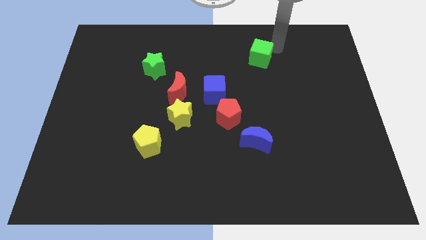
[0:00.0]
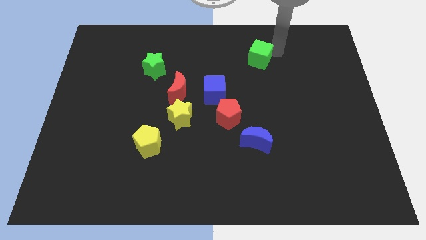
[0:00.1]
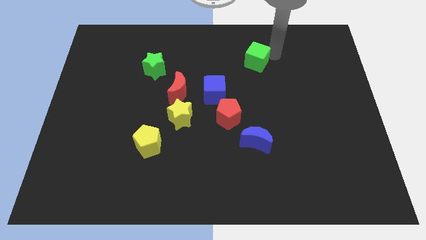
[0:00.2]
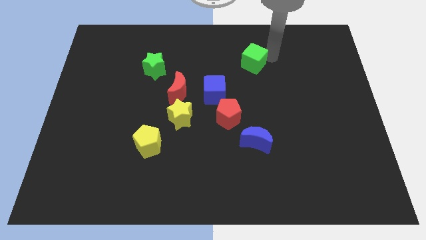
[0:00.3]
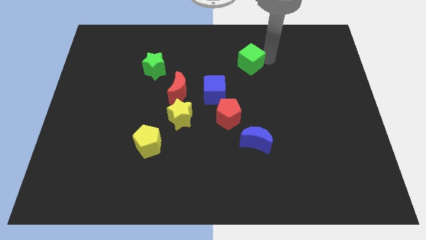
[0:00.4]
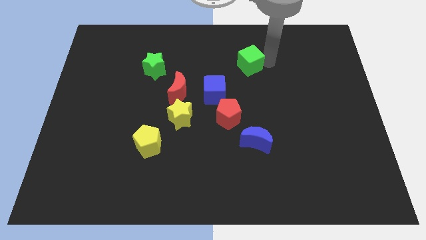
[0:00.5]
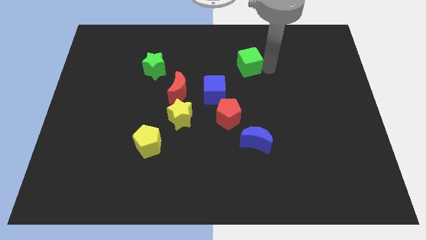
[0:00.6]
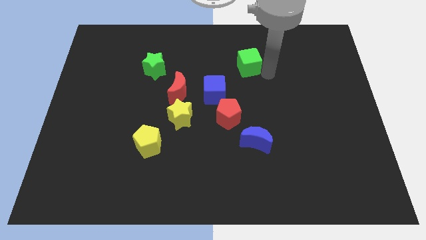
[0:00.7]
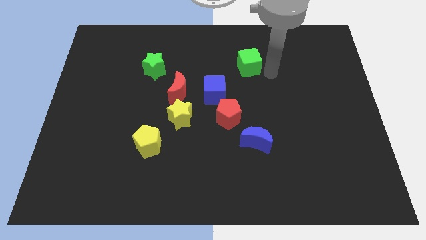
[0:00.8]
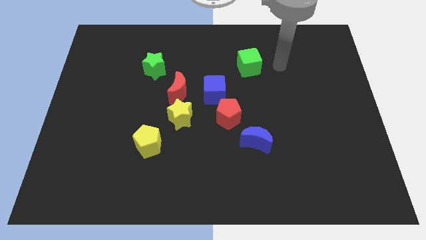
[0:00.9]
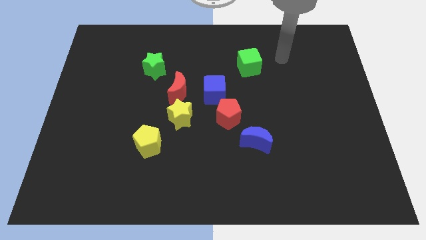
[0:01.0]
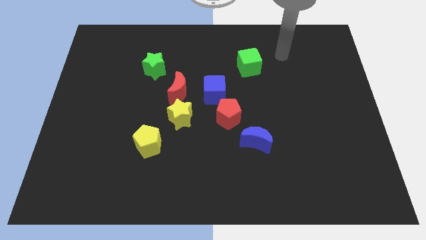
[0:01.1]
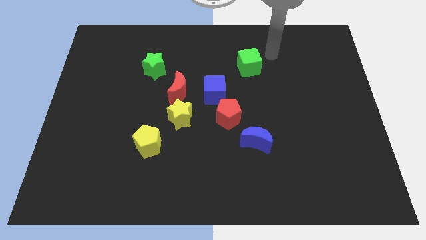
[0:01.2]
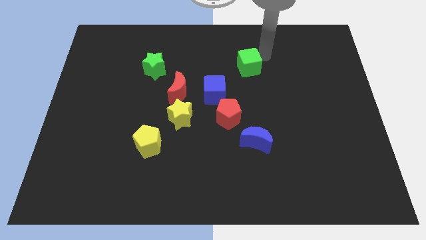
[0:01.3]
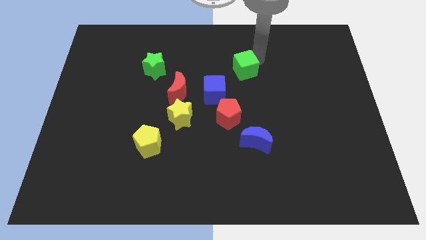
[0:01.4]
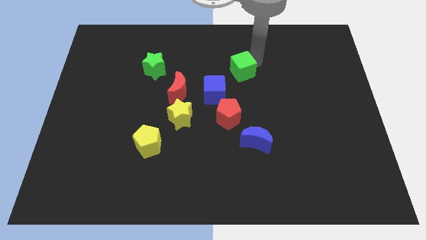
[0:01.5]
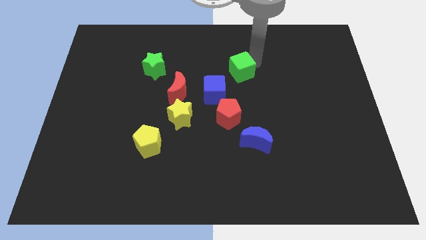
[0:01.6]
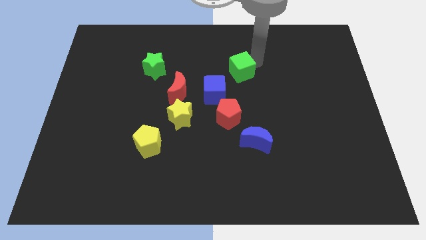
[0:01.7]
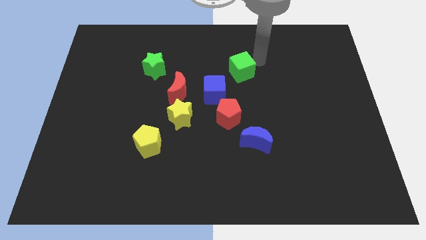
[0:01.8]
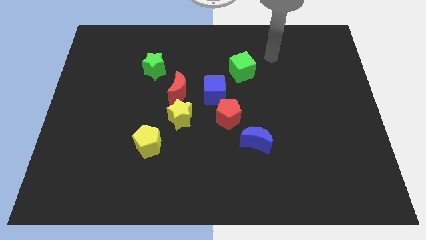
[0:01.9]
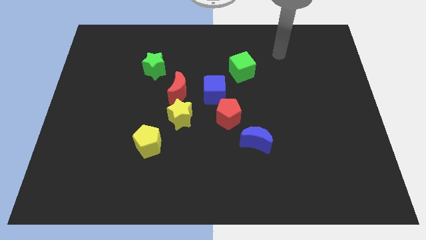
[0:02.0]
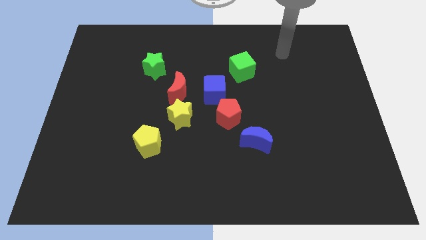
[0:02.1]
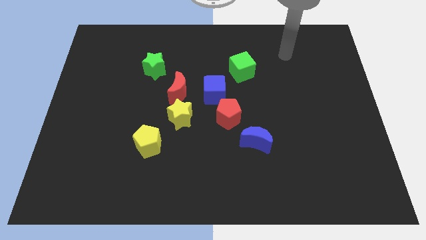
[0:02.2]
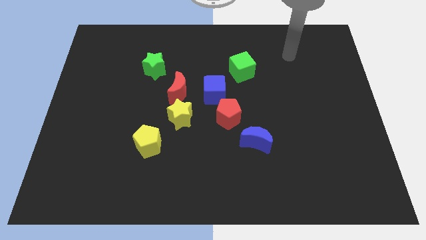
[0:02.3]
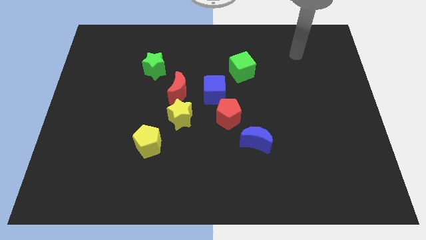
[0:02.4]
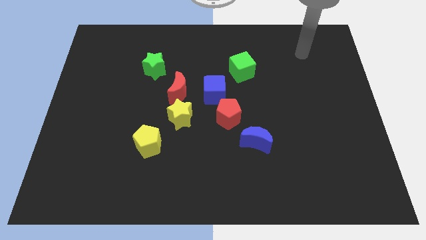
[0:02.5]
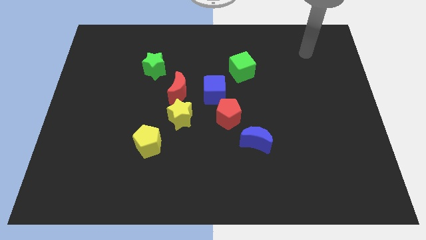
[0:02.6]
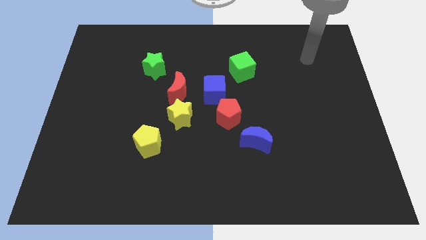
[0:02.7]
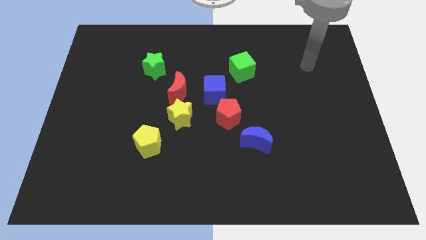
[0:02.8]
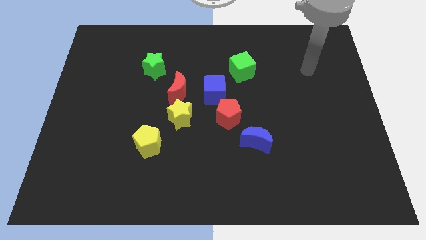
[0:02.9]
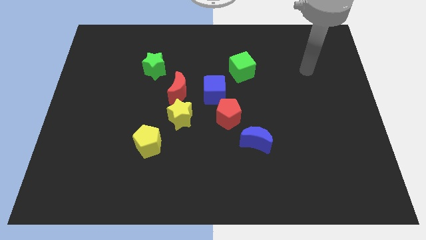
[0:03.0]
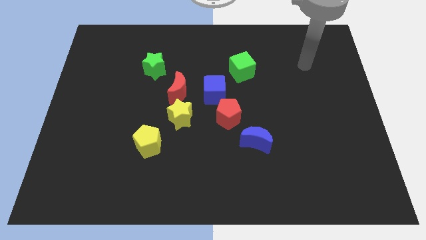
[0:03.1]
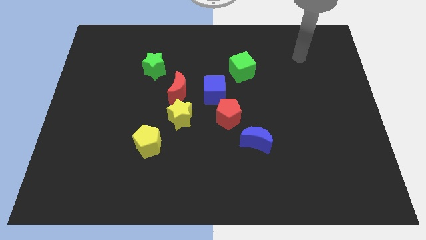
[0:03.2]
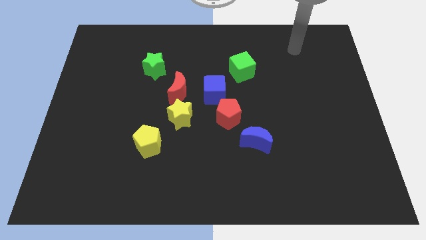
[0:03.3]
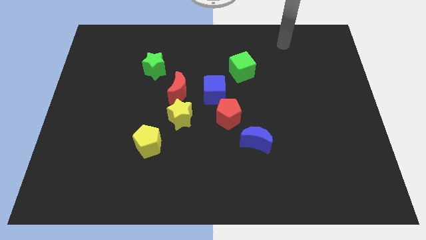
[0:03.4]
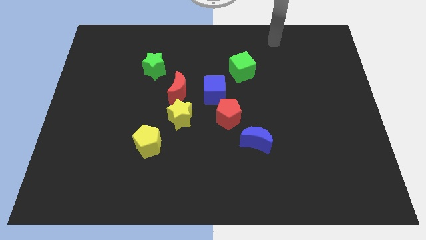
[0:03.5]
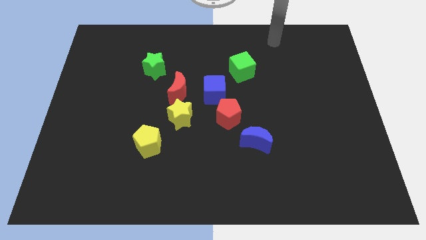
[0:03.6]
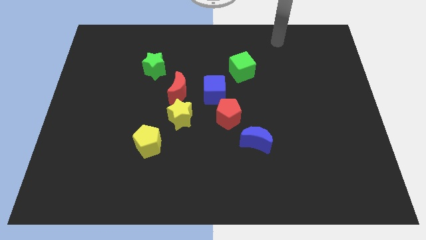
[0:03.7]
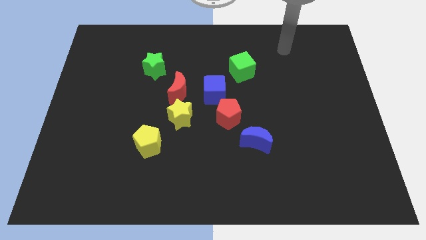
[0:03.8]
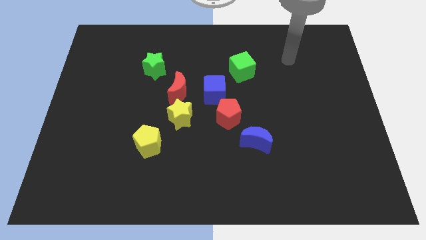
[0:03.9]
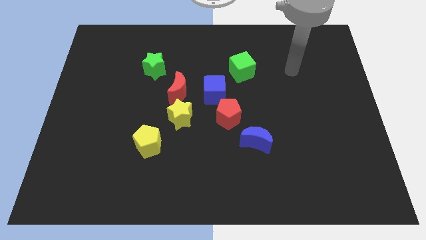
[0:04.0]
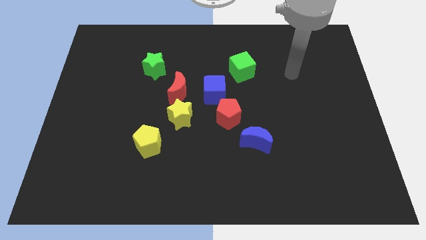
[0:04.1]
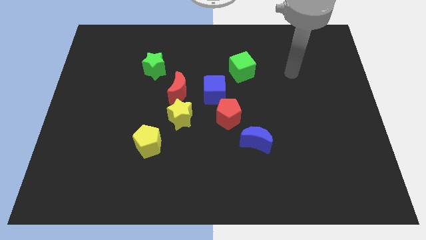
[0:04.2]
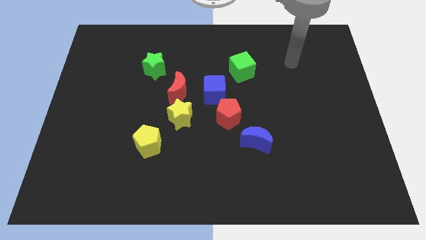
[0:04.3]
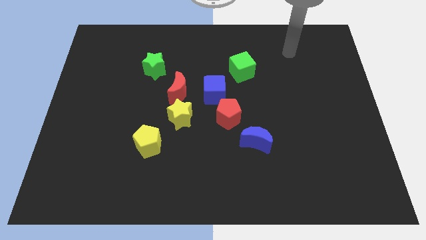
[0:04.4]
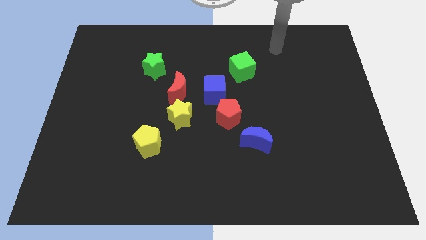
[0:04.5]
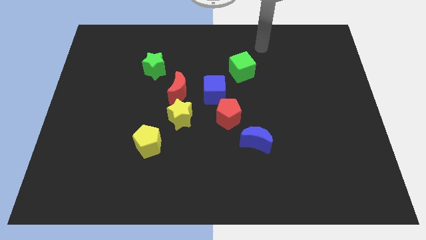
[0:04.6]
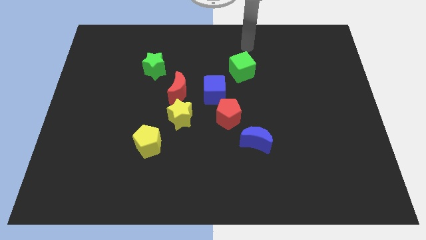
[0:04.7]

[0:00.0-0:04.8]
push the green cube towards blue cube

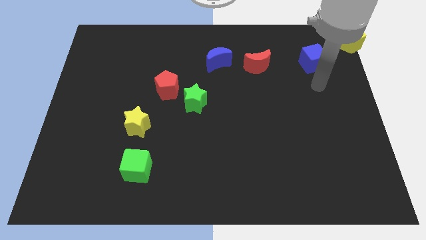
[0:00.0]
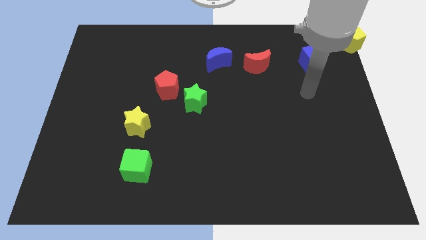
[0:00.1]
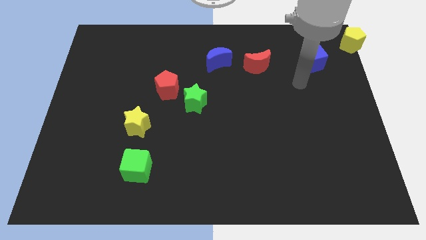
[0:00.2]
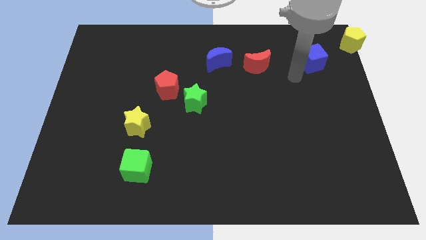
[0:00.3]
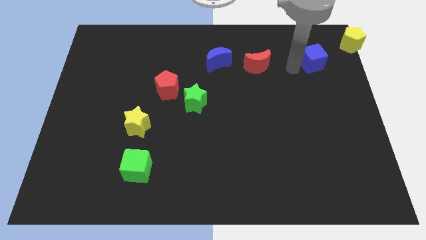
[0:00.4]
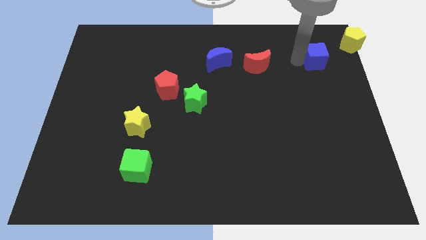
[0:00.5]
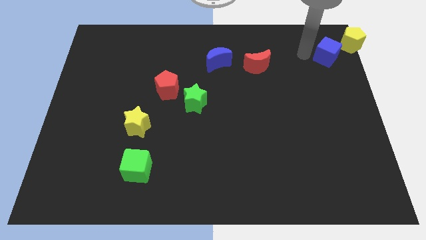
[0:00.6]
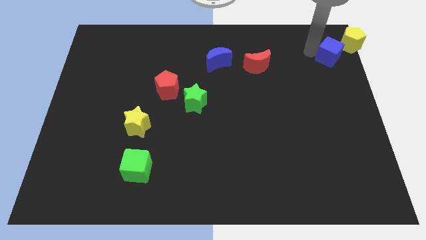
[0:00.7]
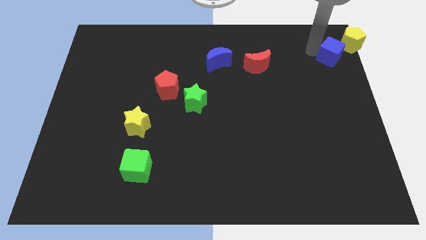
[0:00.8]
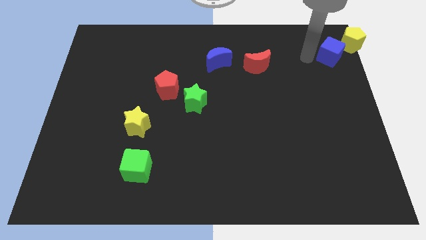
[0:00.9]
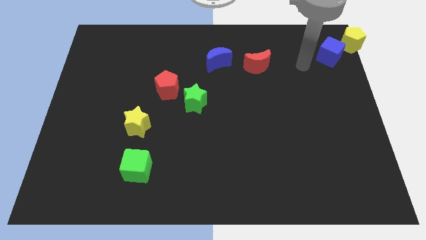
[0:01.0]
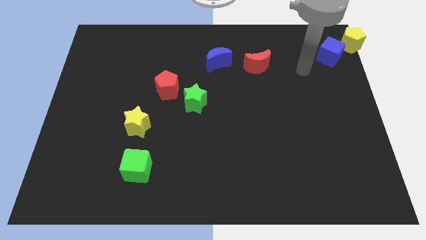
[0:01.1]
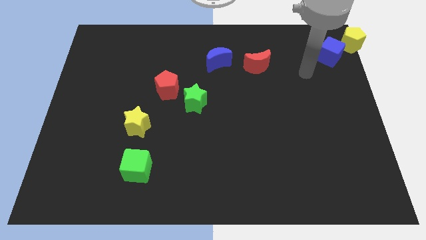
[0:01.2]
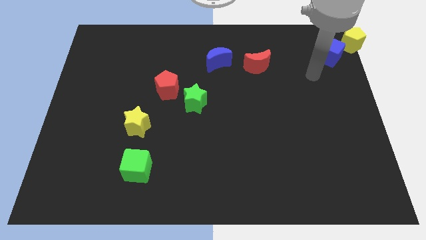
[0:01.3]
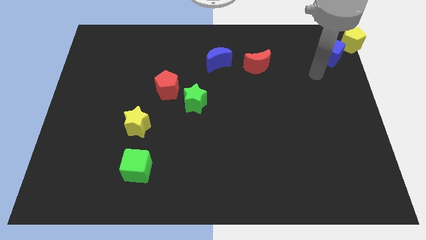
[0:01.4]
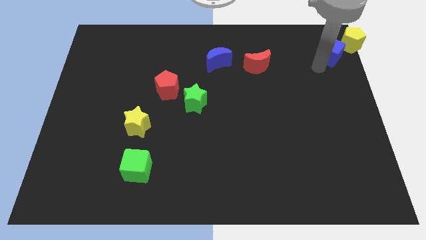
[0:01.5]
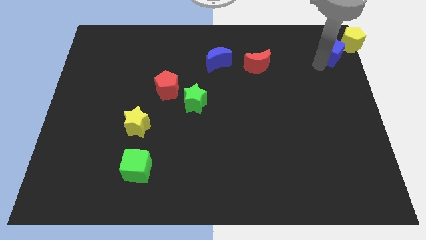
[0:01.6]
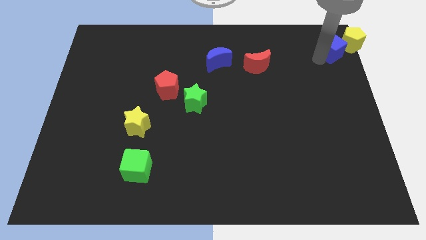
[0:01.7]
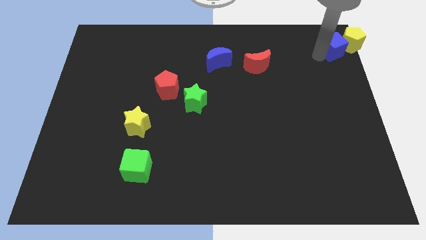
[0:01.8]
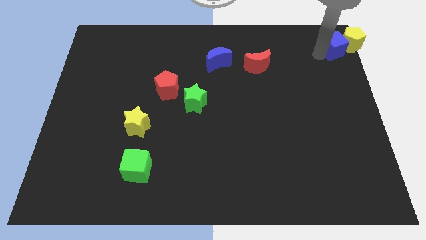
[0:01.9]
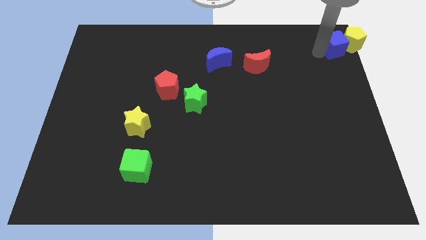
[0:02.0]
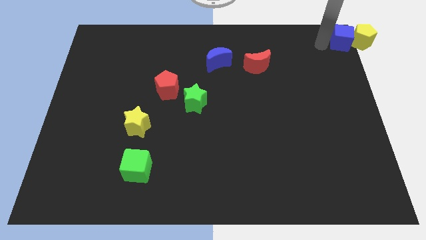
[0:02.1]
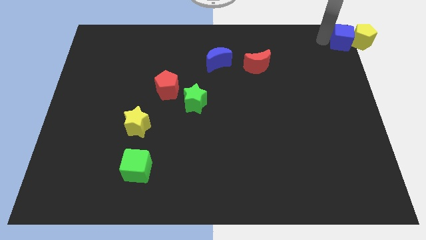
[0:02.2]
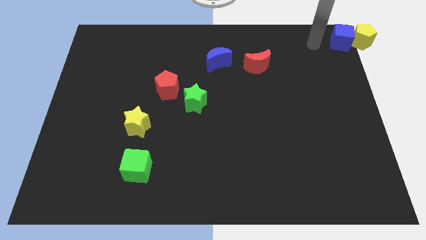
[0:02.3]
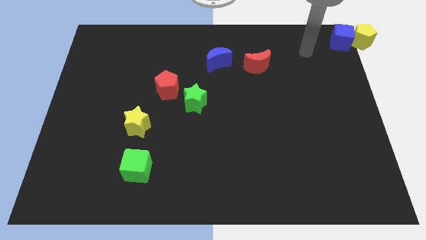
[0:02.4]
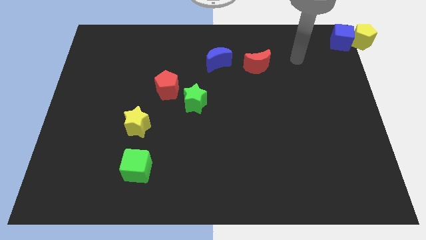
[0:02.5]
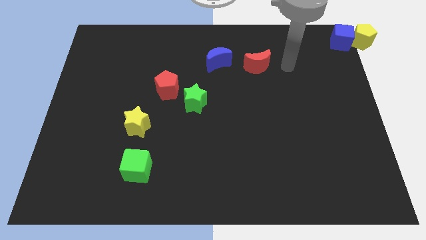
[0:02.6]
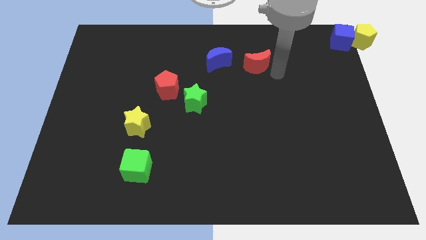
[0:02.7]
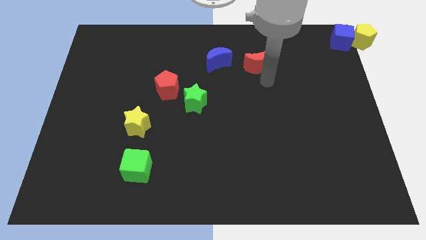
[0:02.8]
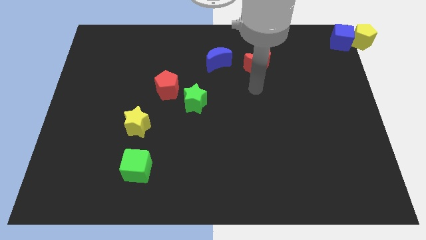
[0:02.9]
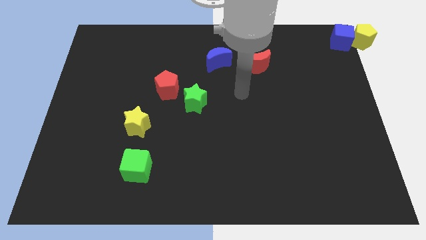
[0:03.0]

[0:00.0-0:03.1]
place the blue cube left to the yellow pentagon

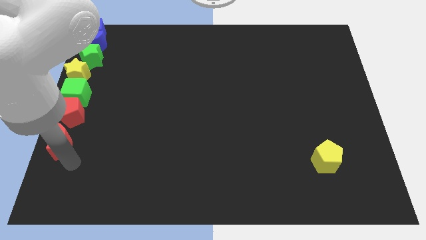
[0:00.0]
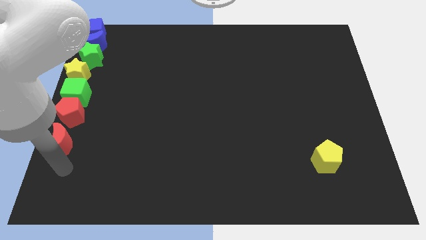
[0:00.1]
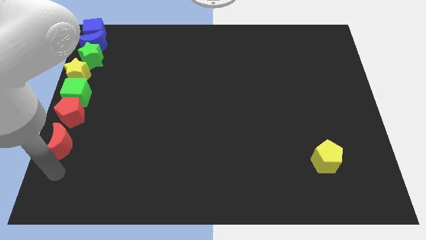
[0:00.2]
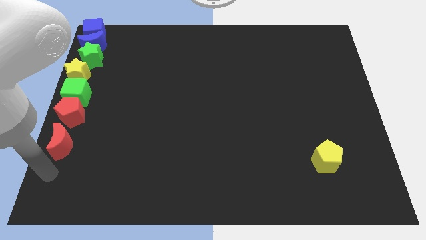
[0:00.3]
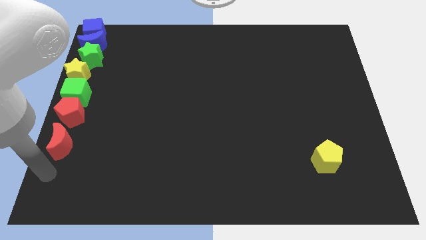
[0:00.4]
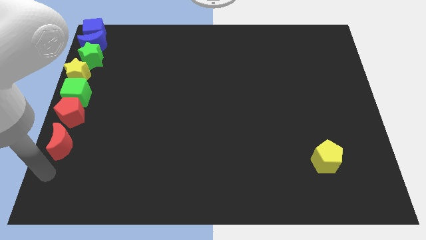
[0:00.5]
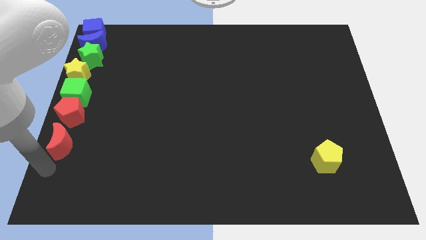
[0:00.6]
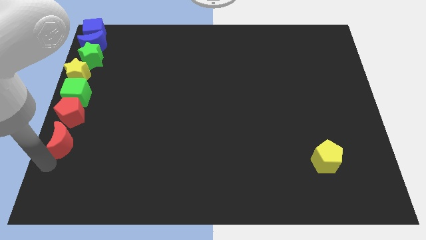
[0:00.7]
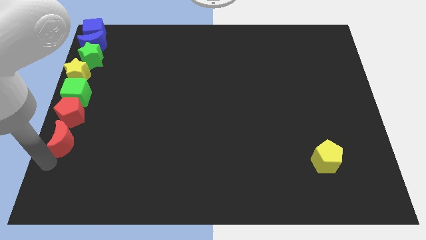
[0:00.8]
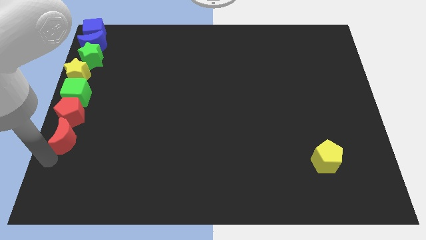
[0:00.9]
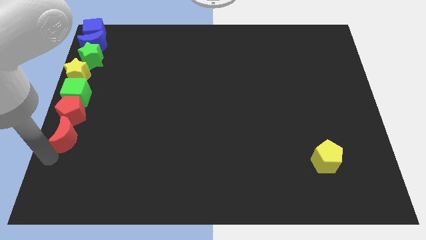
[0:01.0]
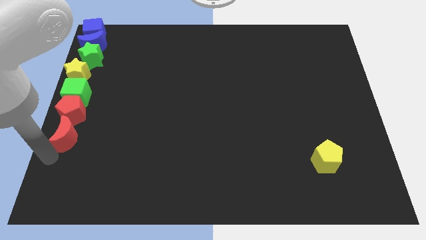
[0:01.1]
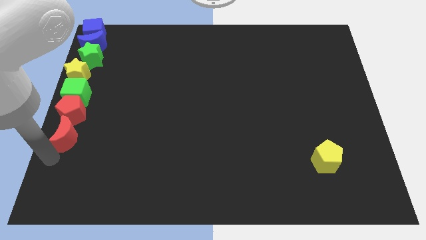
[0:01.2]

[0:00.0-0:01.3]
slightly push the red blocks towards the green cube
